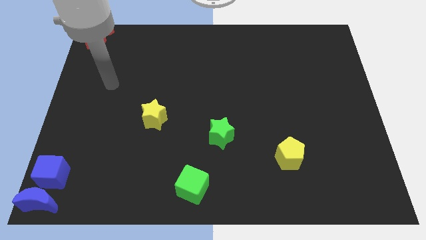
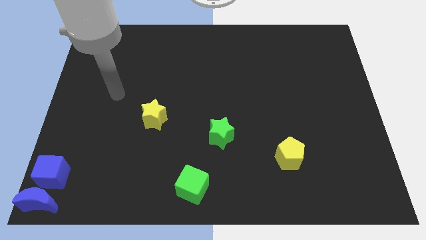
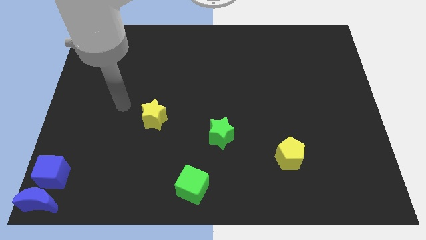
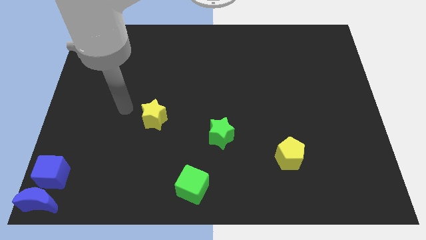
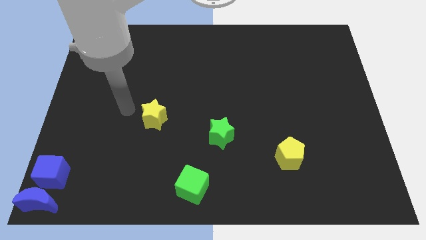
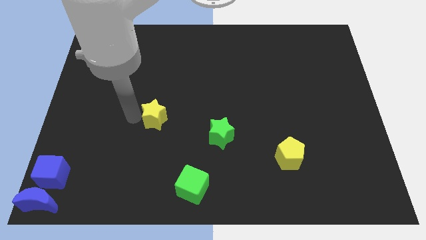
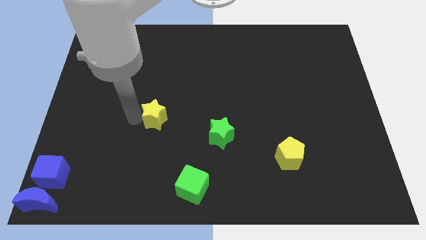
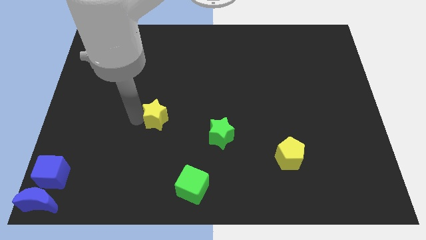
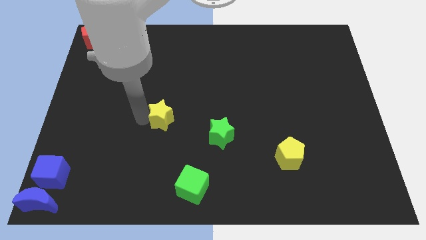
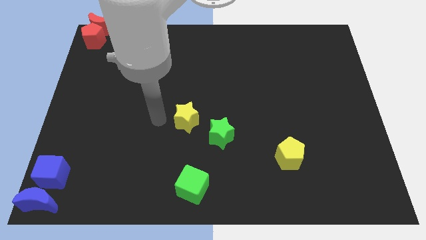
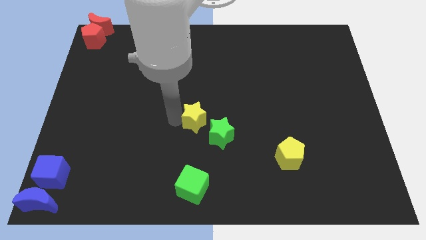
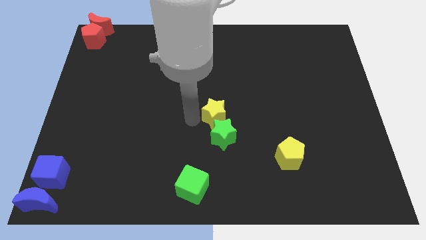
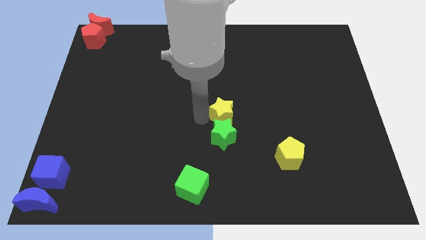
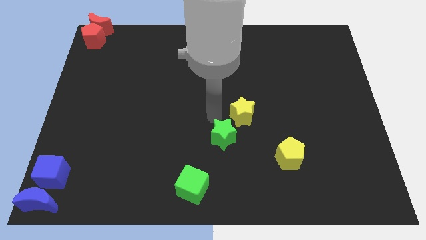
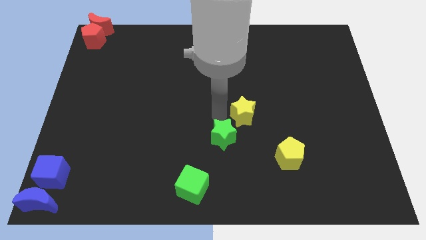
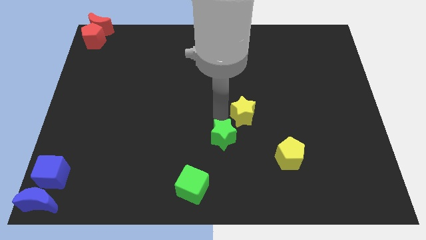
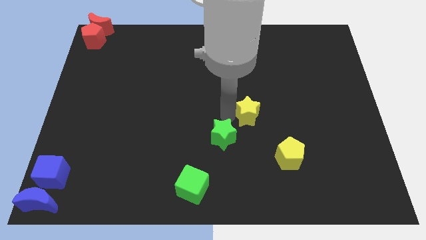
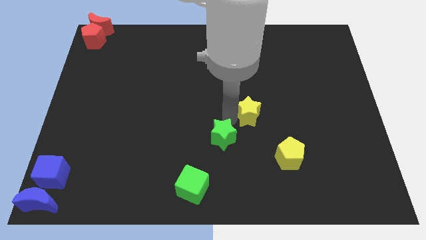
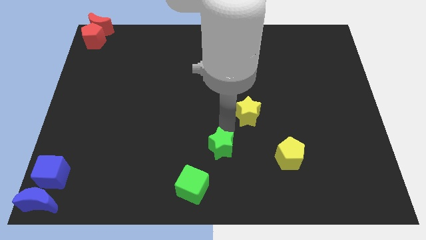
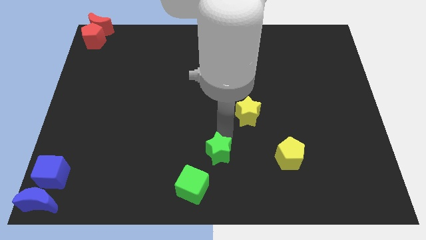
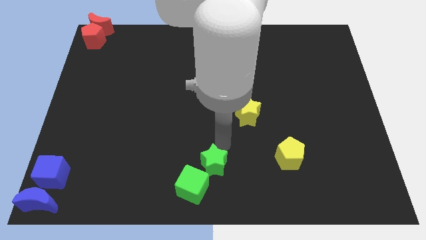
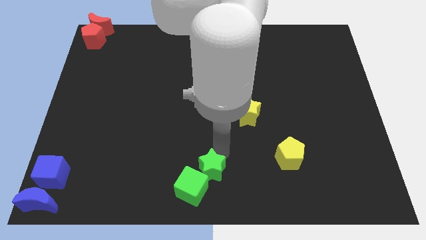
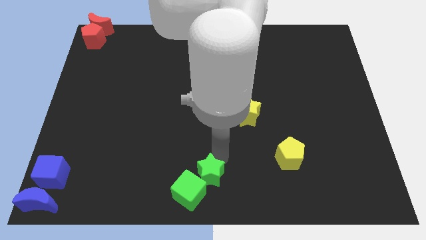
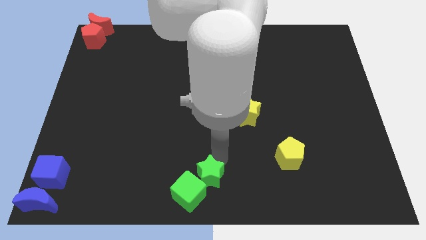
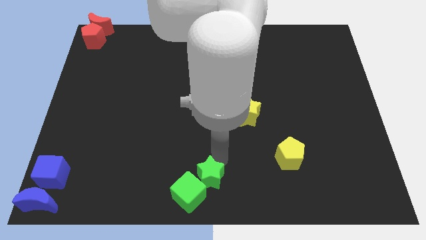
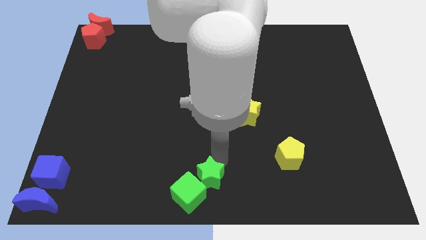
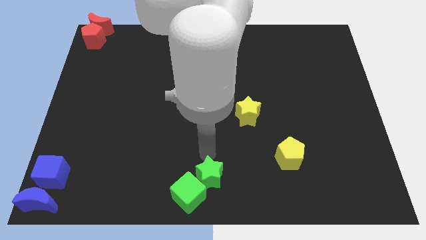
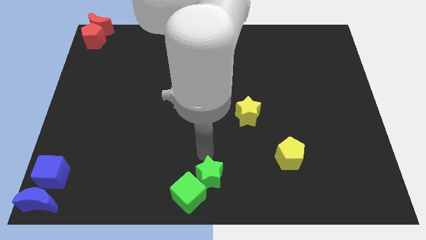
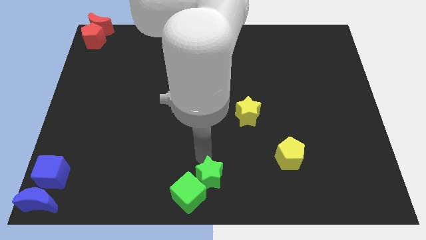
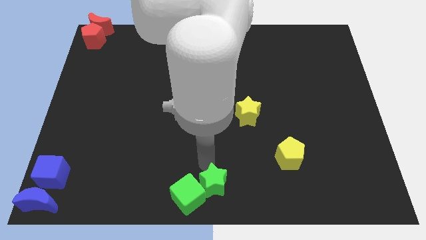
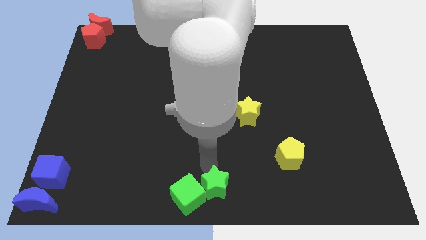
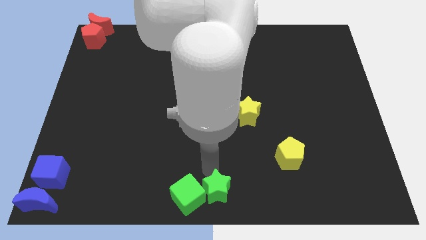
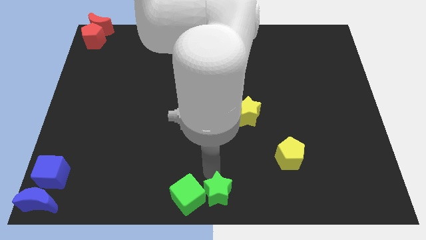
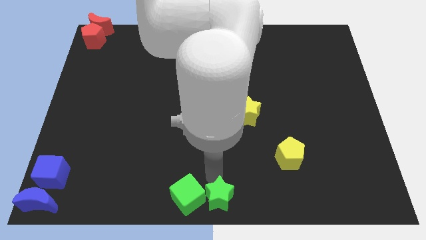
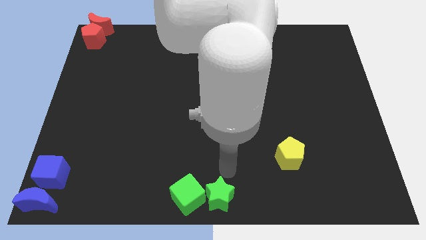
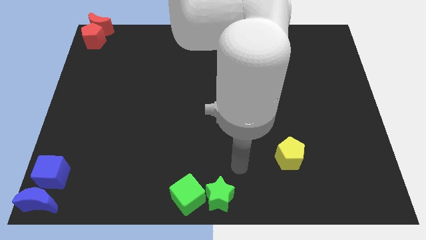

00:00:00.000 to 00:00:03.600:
push green star in to bottom center

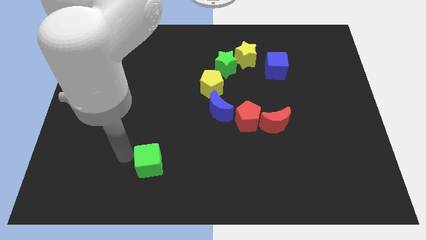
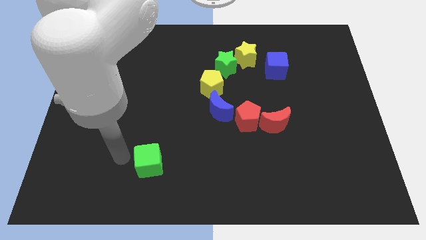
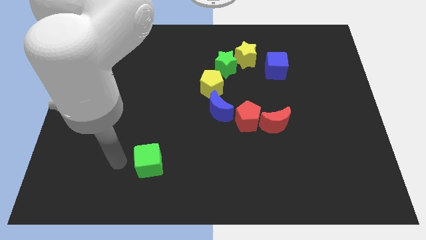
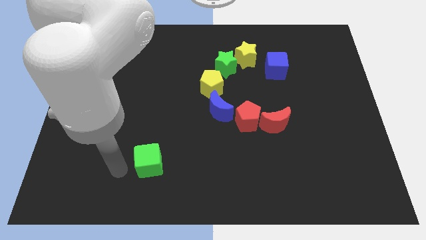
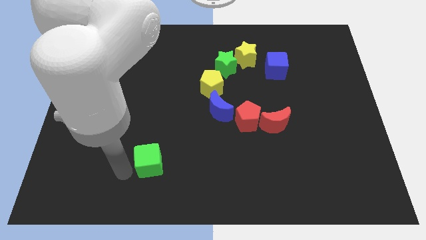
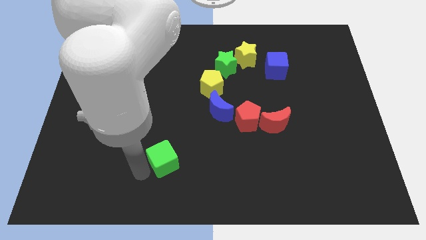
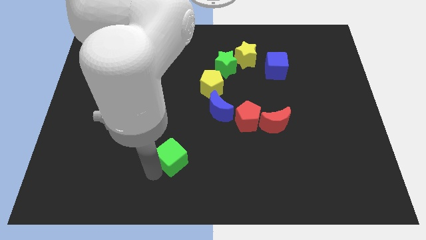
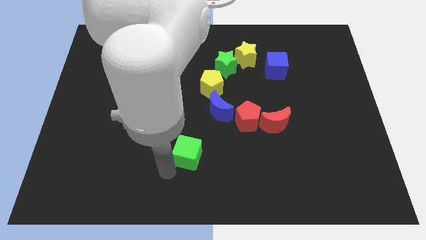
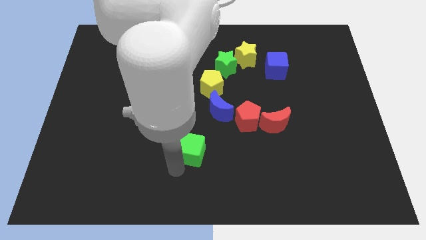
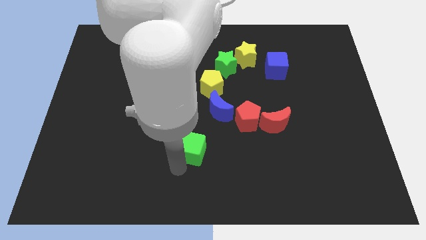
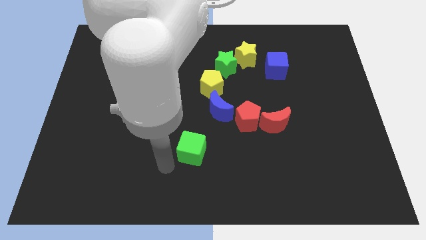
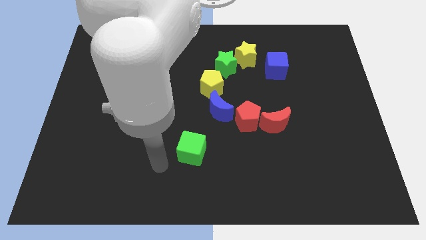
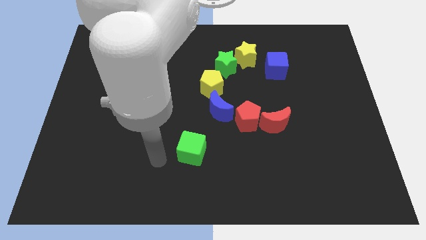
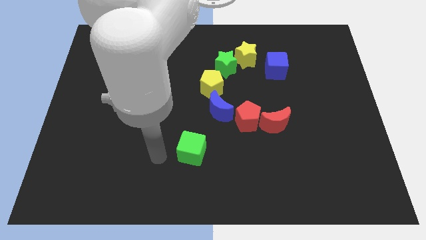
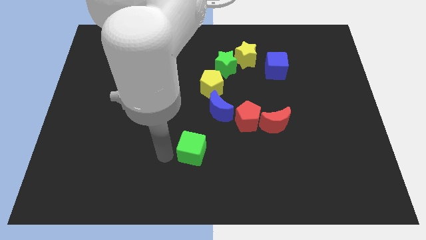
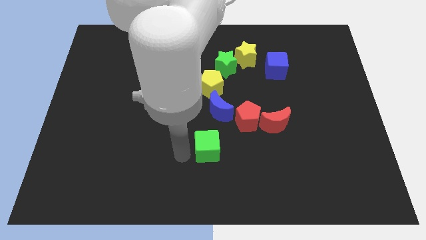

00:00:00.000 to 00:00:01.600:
move the green cube to the right side of the board

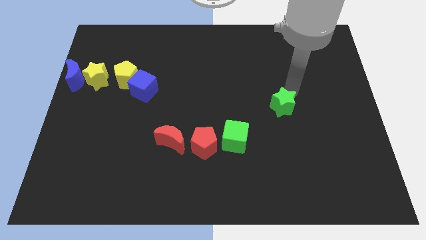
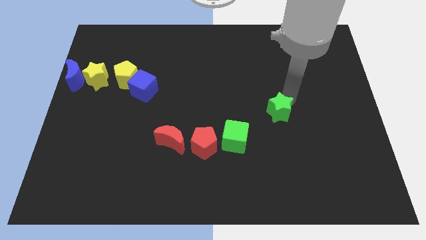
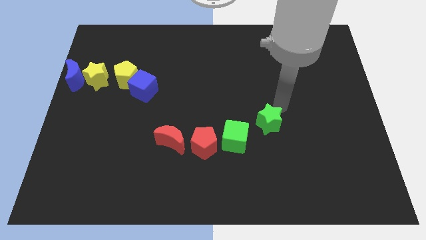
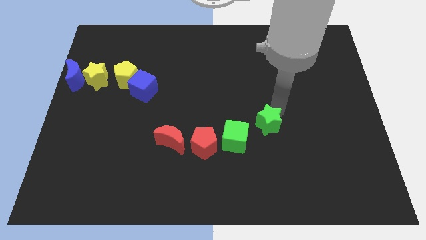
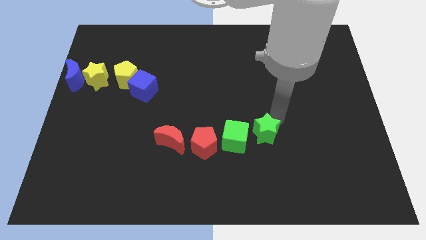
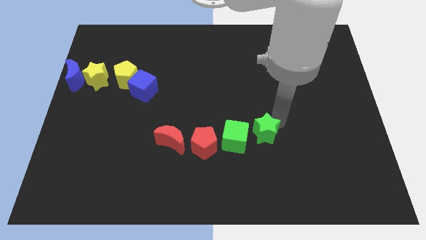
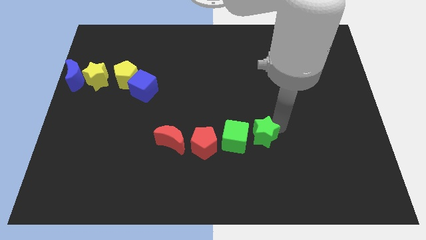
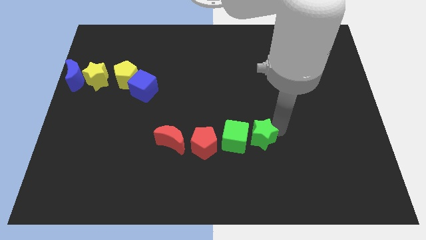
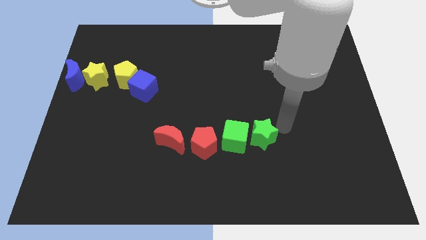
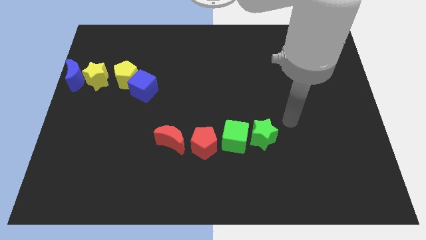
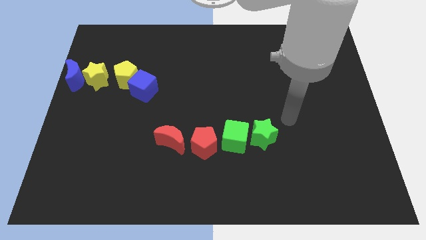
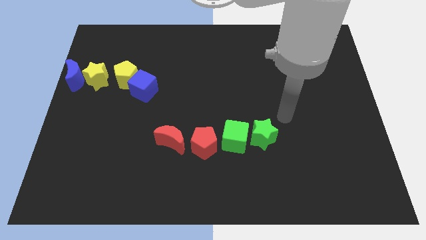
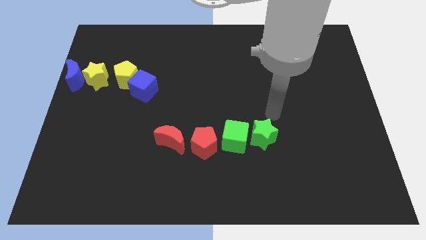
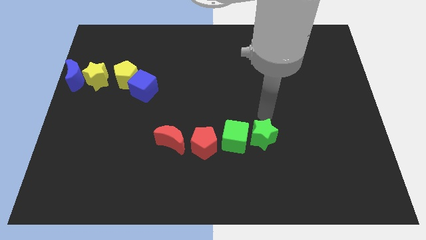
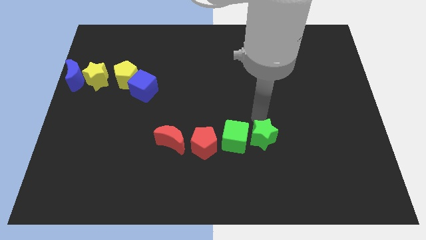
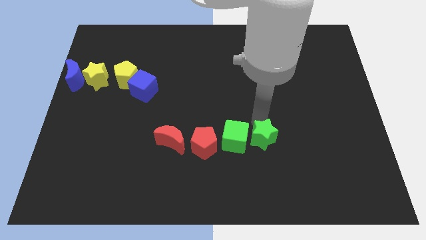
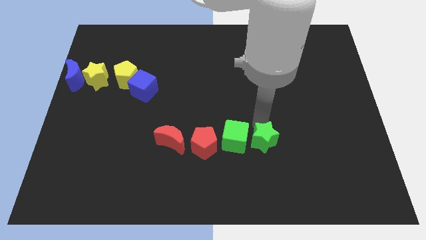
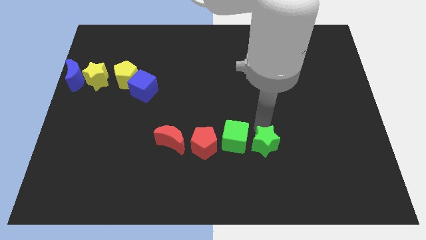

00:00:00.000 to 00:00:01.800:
place the green star close to the right to the green cube

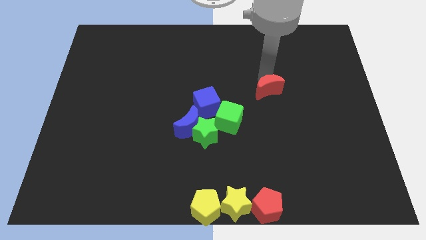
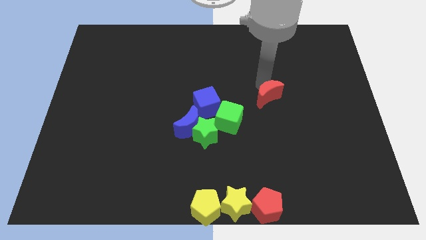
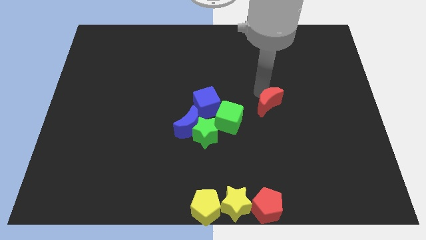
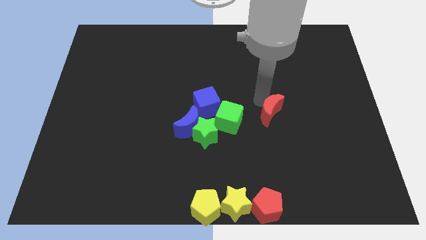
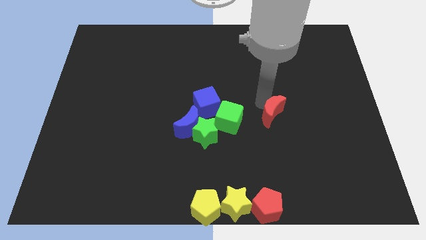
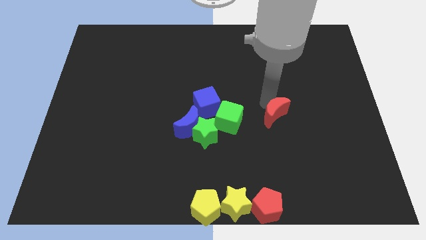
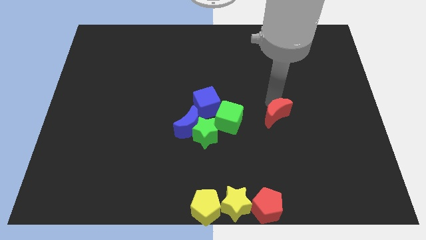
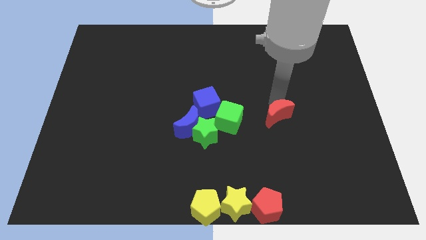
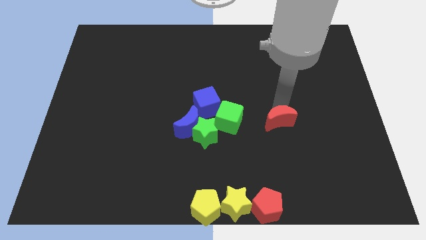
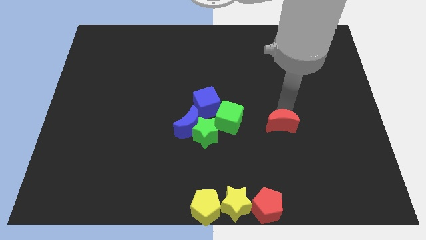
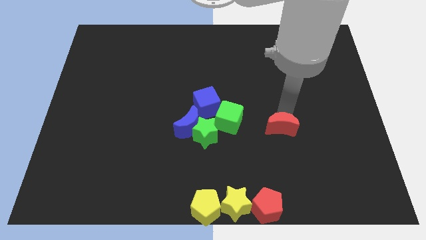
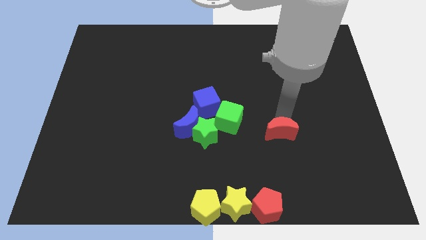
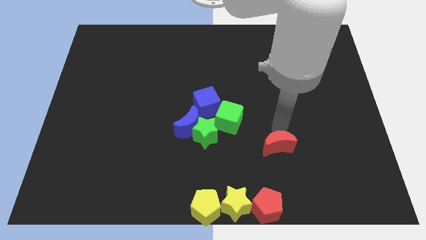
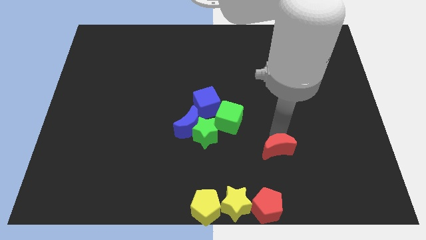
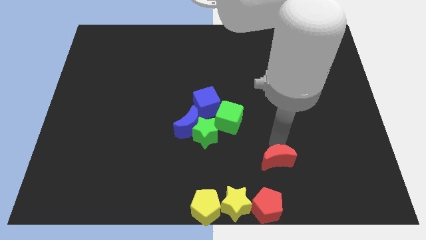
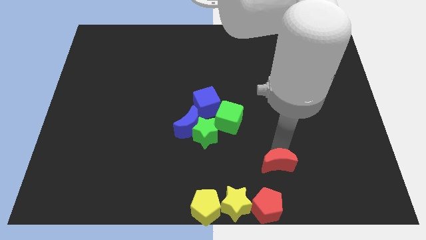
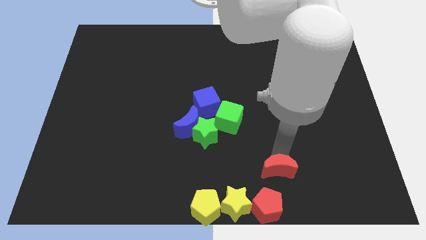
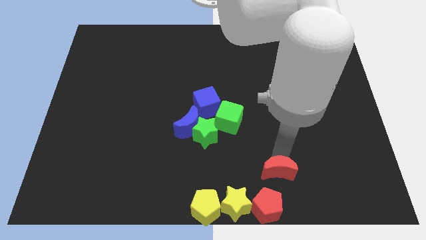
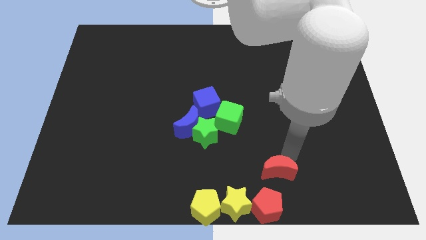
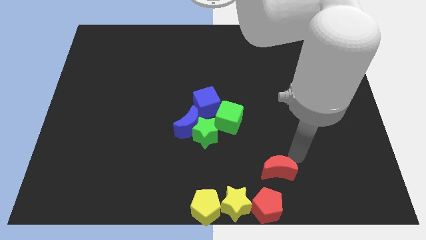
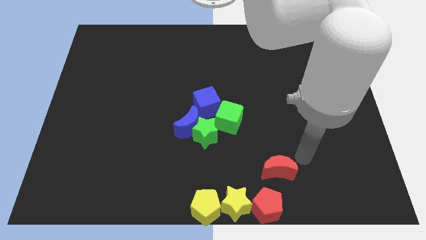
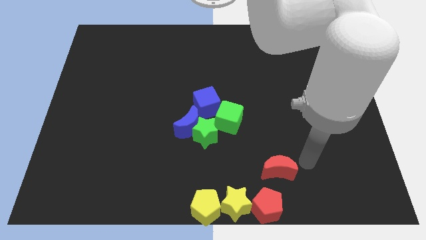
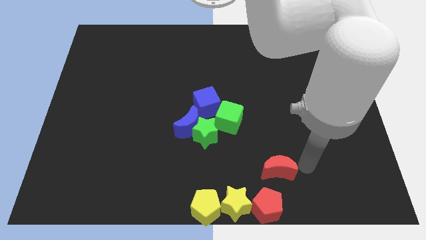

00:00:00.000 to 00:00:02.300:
place the red moon to the bottom center
